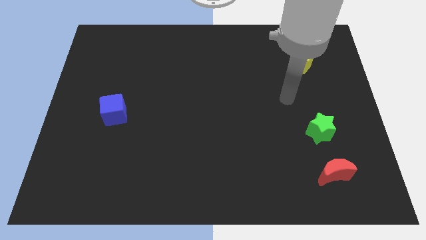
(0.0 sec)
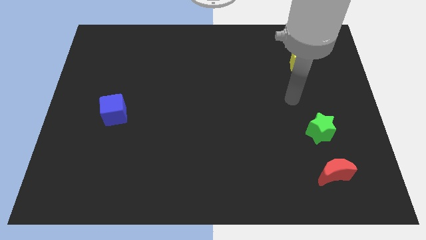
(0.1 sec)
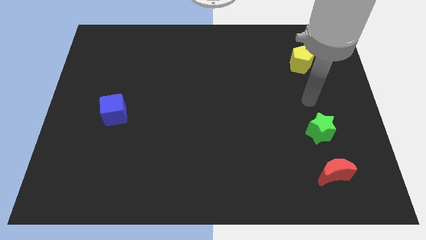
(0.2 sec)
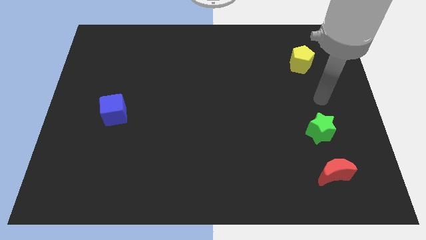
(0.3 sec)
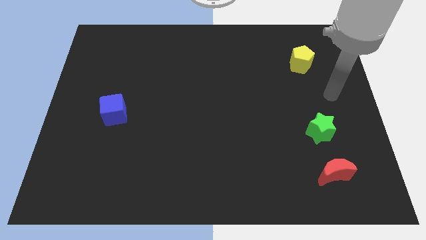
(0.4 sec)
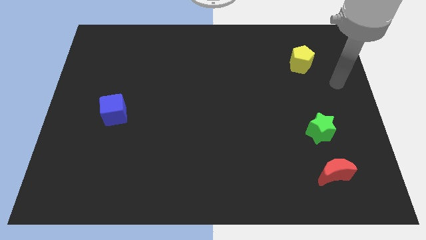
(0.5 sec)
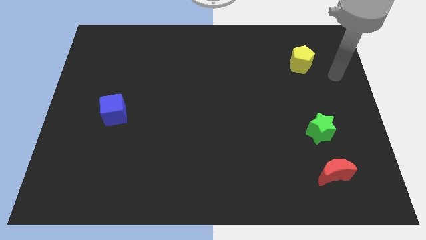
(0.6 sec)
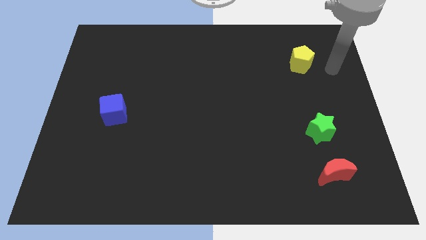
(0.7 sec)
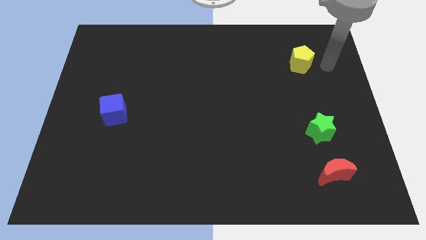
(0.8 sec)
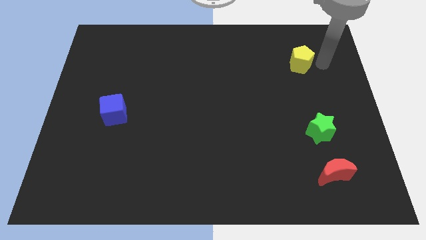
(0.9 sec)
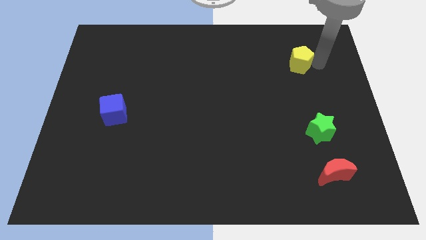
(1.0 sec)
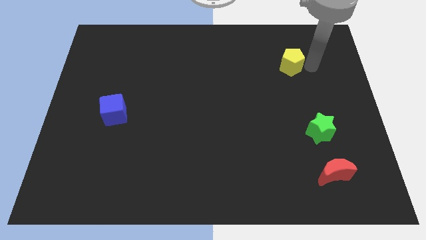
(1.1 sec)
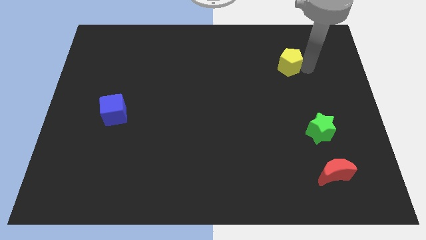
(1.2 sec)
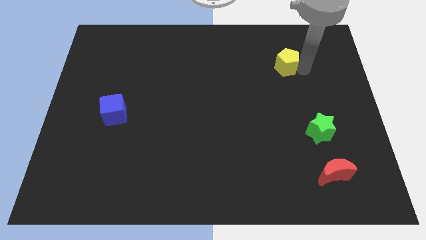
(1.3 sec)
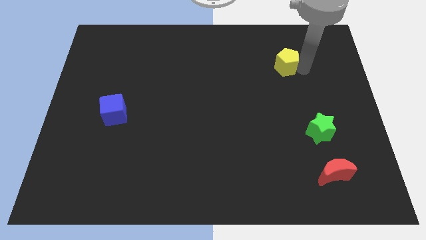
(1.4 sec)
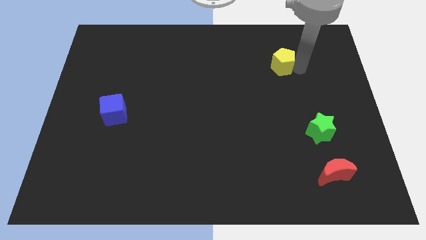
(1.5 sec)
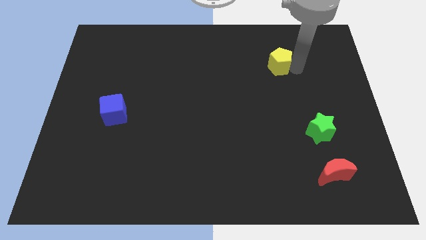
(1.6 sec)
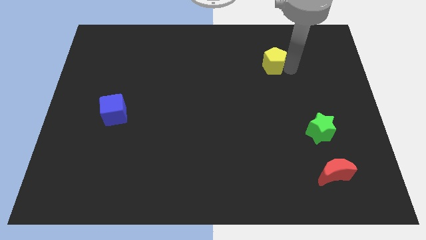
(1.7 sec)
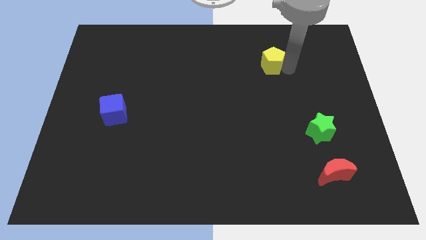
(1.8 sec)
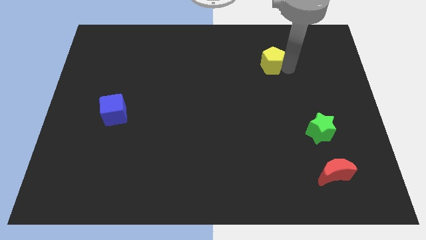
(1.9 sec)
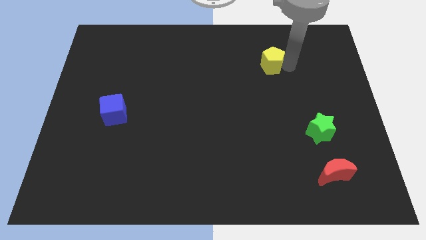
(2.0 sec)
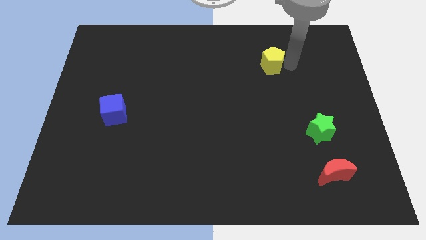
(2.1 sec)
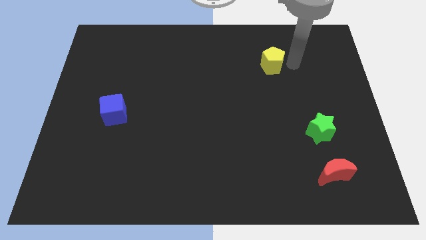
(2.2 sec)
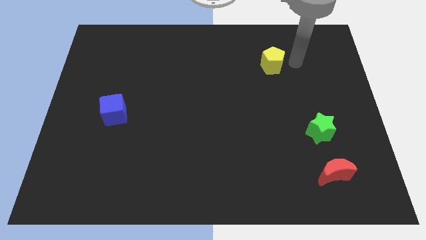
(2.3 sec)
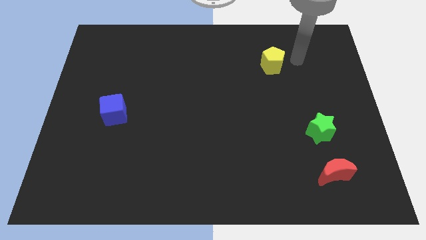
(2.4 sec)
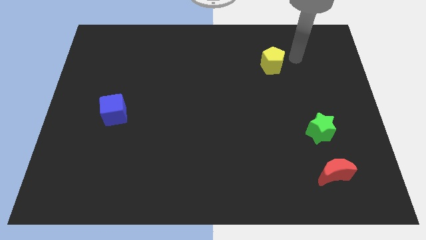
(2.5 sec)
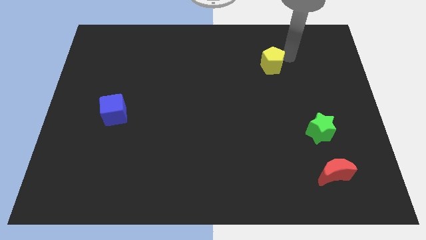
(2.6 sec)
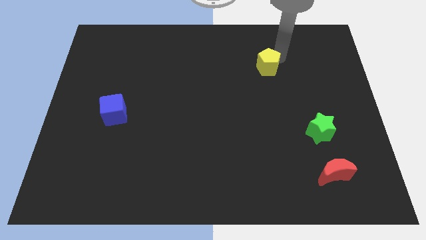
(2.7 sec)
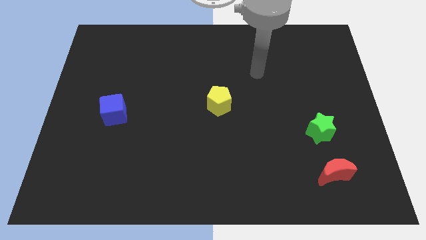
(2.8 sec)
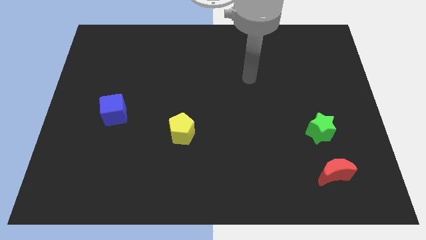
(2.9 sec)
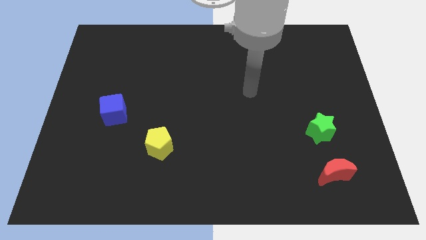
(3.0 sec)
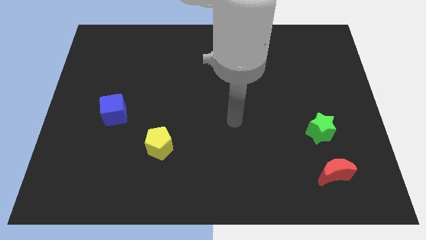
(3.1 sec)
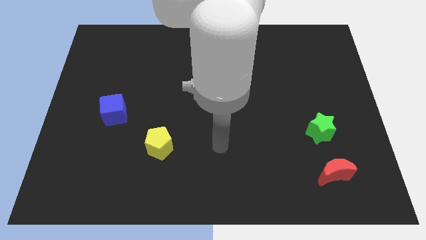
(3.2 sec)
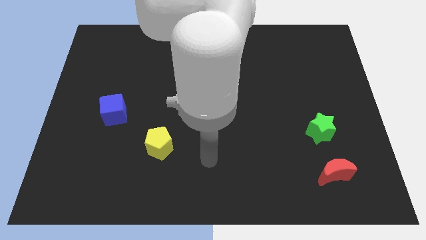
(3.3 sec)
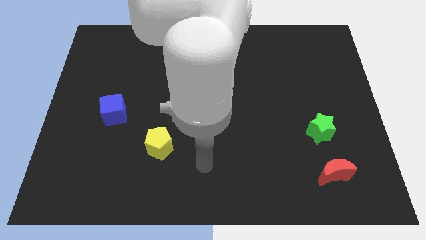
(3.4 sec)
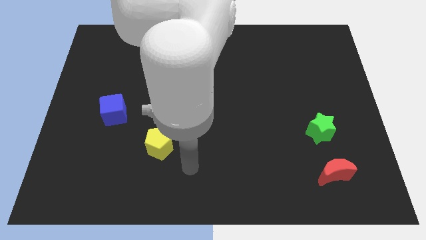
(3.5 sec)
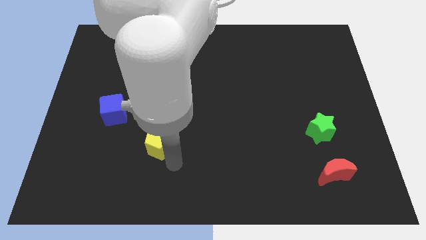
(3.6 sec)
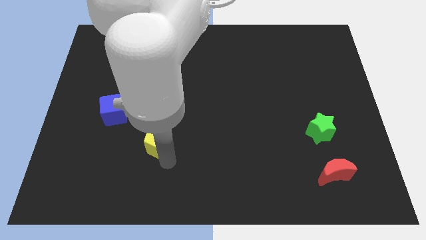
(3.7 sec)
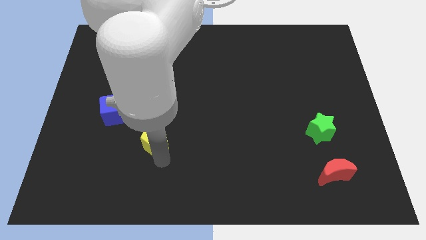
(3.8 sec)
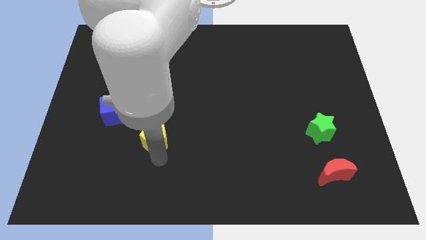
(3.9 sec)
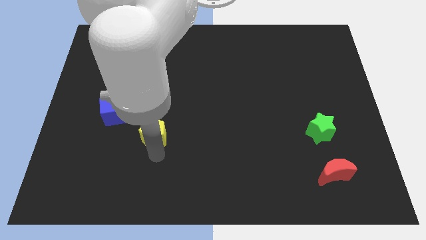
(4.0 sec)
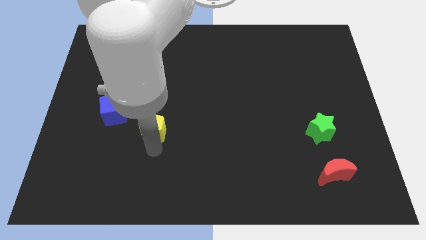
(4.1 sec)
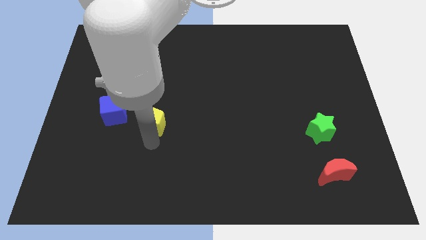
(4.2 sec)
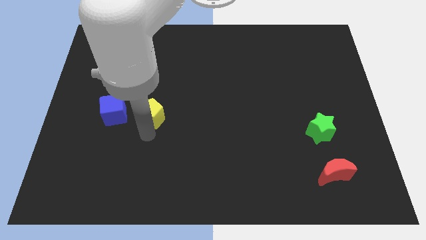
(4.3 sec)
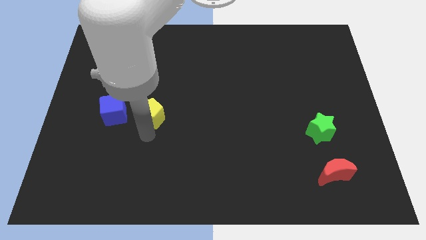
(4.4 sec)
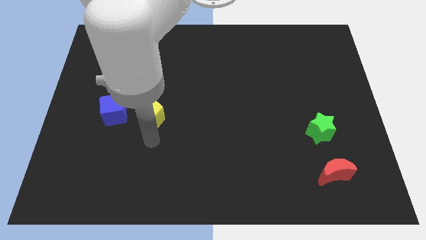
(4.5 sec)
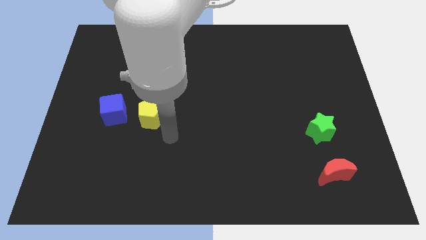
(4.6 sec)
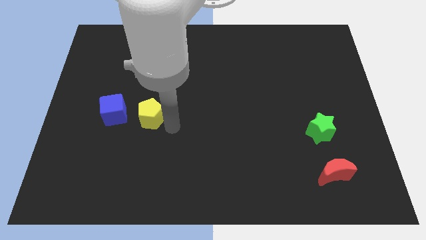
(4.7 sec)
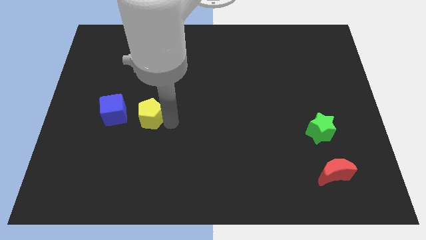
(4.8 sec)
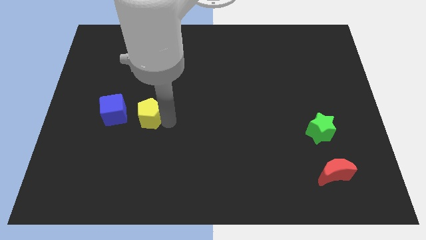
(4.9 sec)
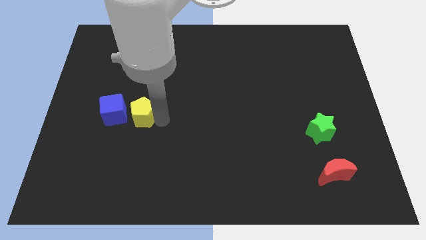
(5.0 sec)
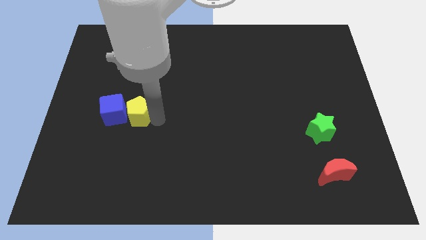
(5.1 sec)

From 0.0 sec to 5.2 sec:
slide the pentagon close to the blue block

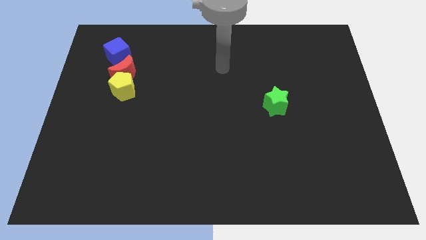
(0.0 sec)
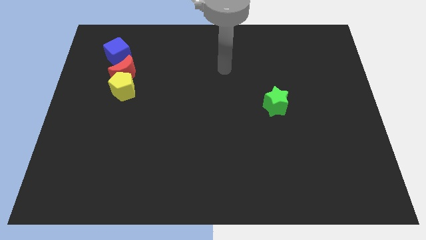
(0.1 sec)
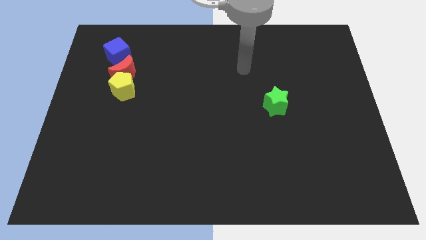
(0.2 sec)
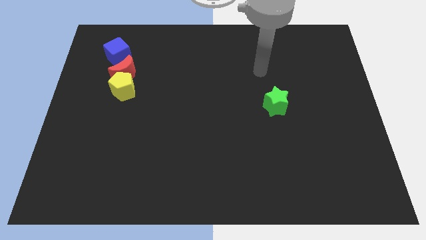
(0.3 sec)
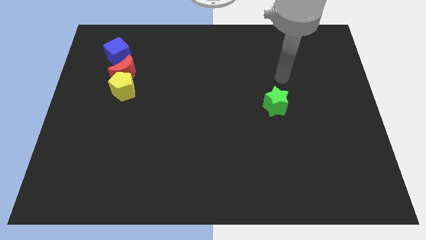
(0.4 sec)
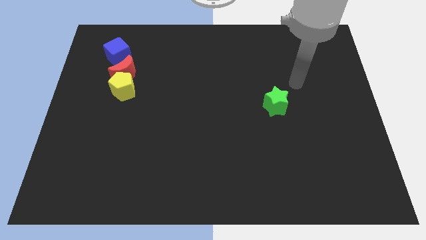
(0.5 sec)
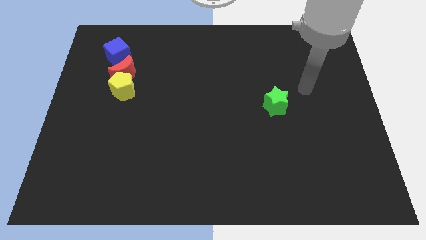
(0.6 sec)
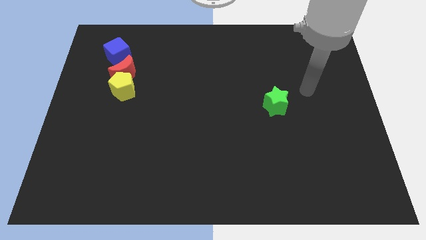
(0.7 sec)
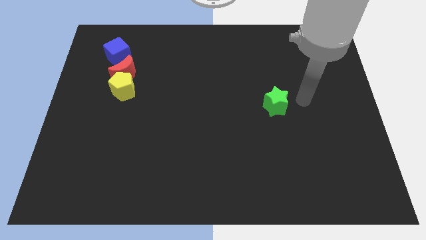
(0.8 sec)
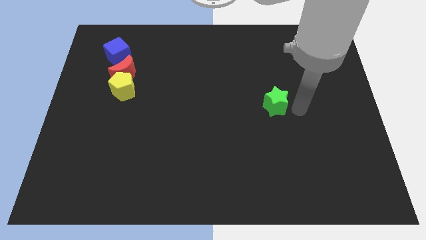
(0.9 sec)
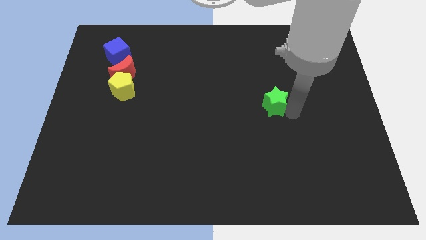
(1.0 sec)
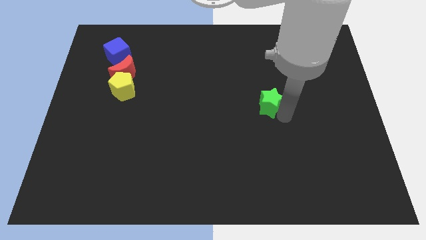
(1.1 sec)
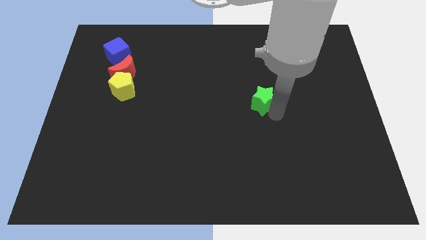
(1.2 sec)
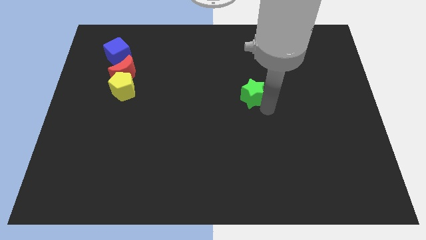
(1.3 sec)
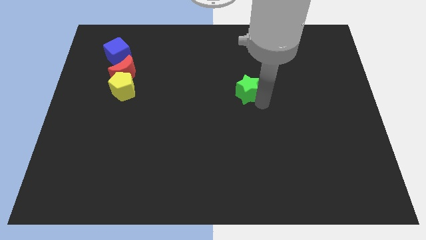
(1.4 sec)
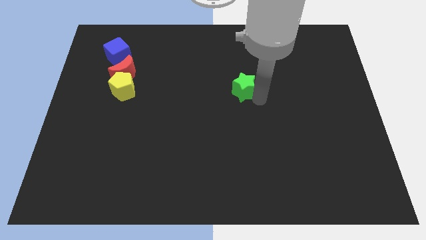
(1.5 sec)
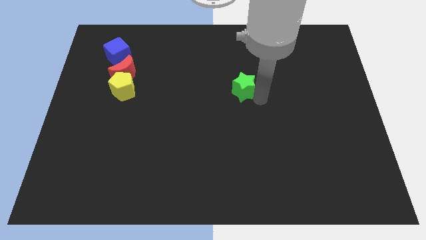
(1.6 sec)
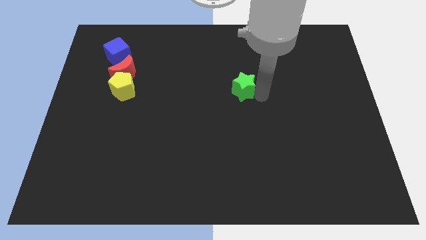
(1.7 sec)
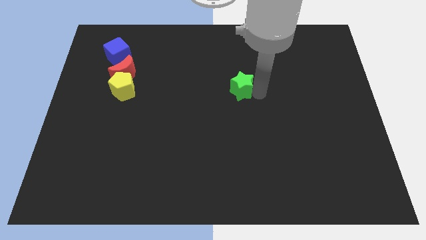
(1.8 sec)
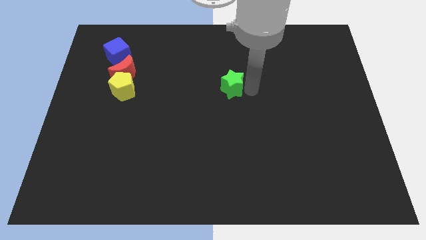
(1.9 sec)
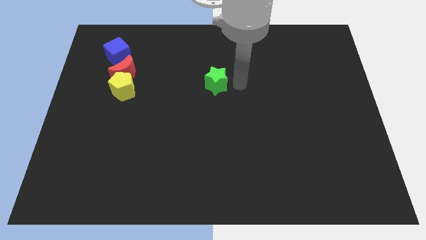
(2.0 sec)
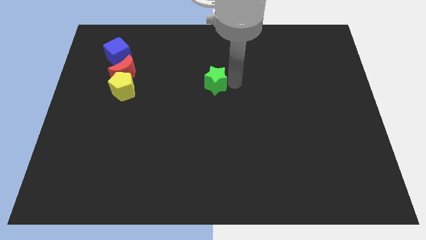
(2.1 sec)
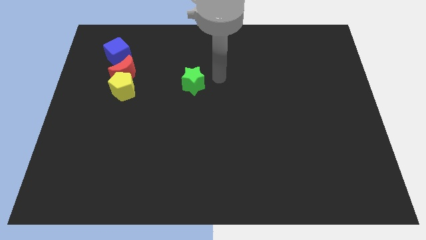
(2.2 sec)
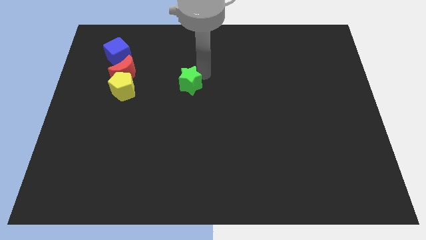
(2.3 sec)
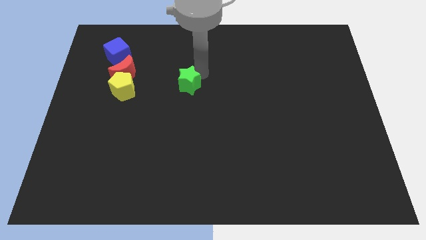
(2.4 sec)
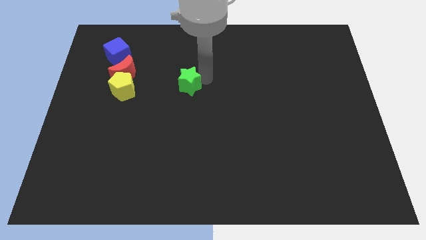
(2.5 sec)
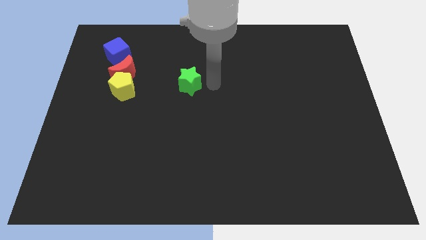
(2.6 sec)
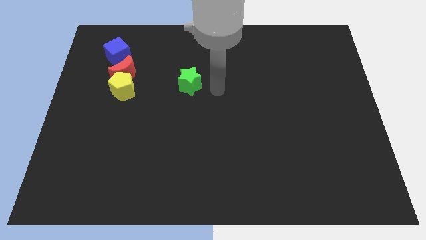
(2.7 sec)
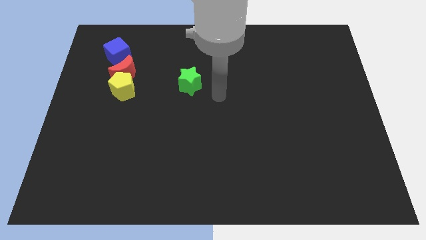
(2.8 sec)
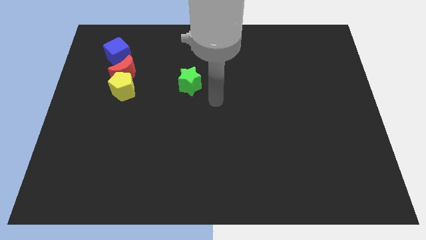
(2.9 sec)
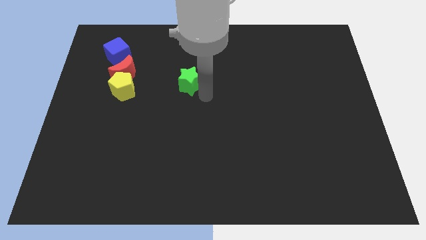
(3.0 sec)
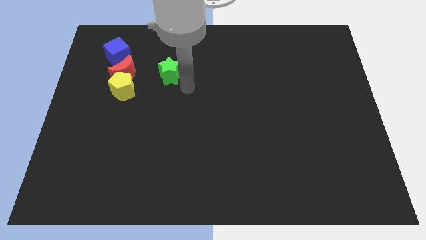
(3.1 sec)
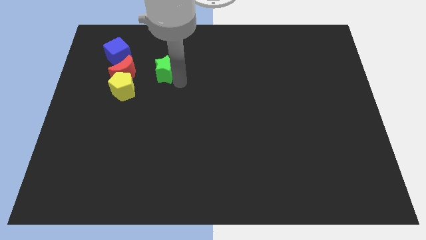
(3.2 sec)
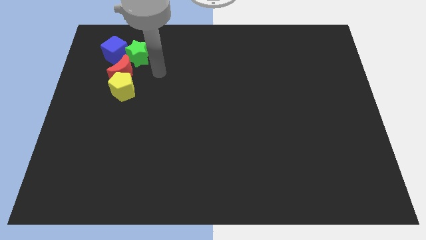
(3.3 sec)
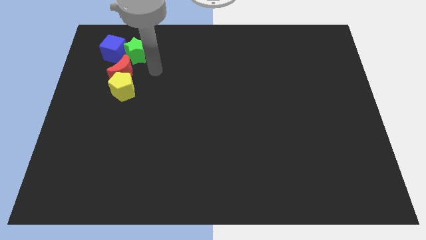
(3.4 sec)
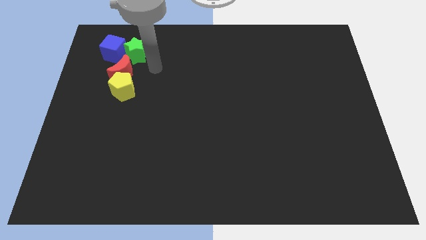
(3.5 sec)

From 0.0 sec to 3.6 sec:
move the star to the blue cube
